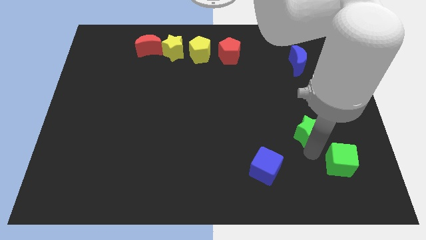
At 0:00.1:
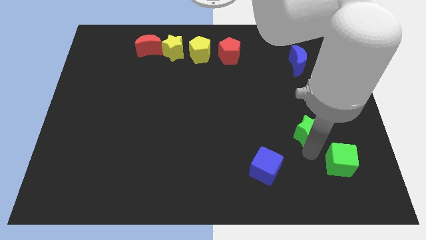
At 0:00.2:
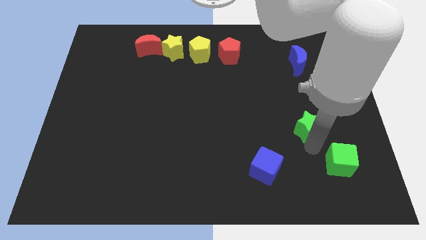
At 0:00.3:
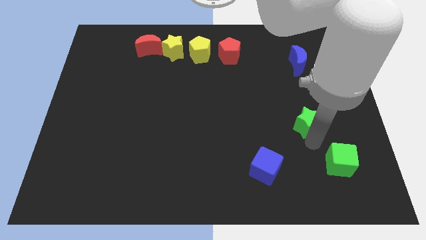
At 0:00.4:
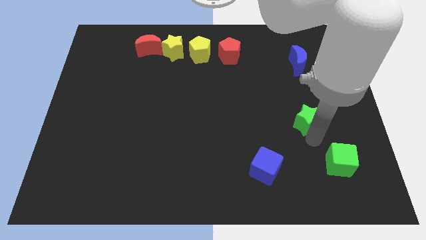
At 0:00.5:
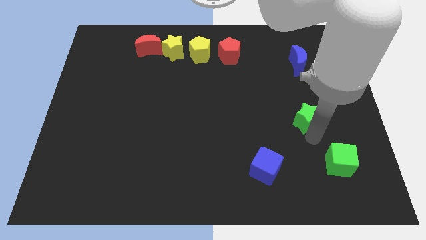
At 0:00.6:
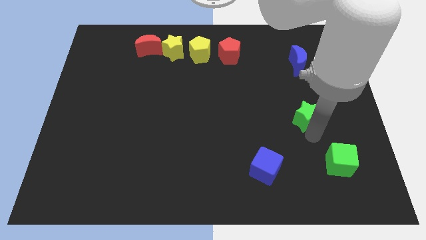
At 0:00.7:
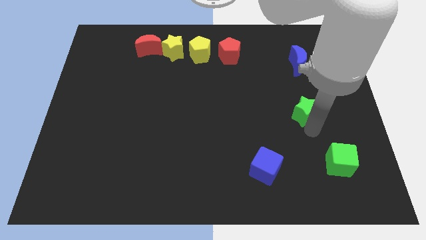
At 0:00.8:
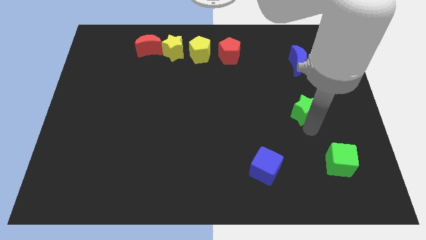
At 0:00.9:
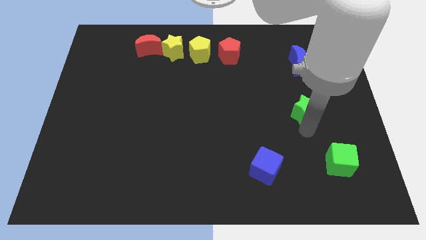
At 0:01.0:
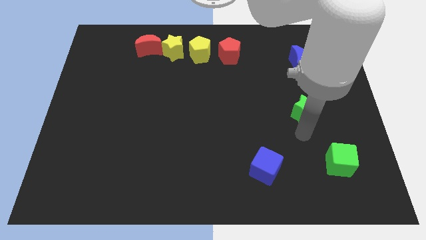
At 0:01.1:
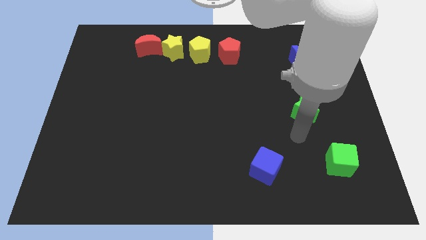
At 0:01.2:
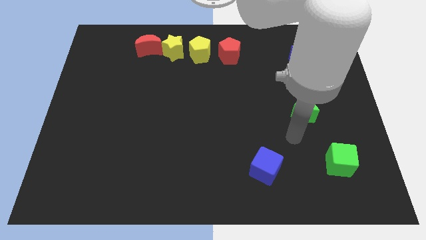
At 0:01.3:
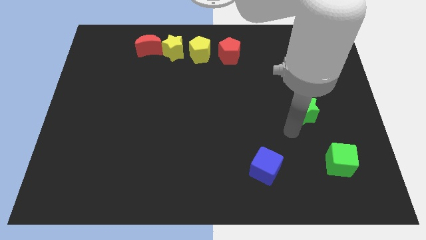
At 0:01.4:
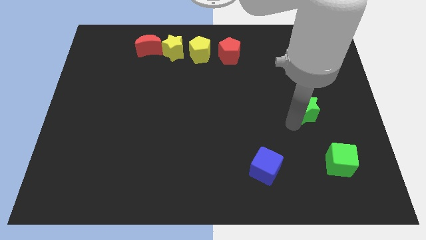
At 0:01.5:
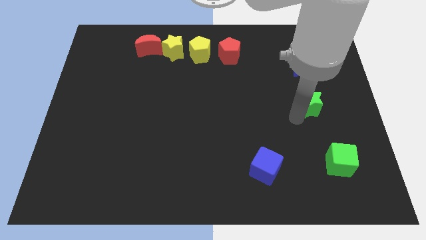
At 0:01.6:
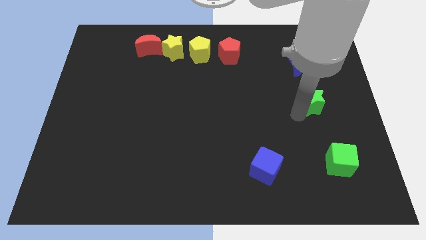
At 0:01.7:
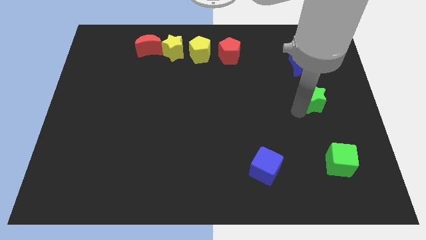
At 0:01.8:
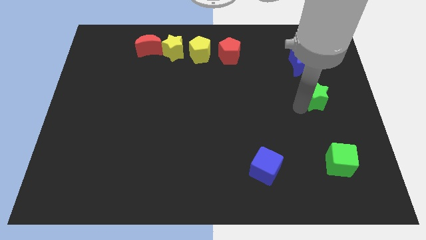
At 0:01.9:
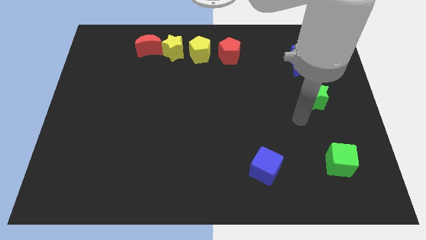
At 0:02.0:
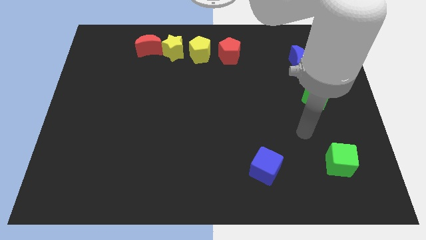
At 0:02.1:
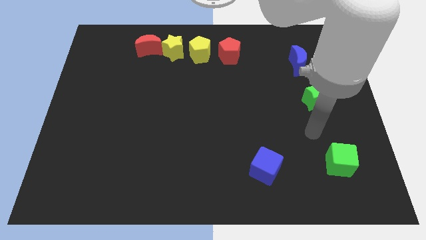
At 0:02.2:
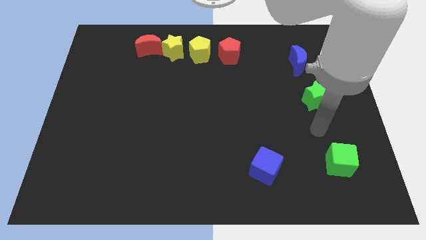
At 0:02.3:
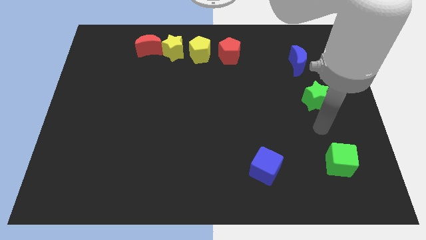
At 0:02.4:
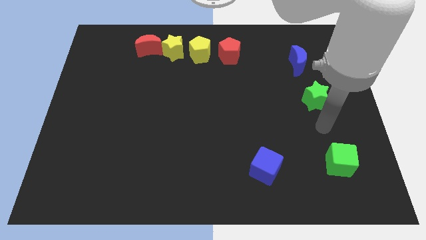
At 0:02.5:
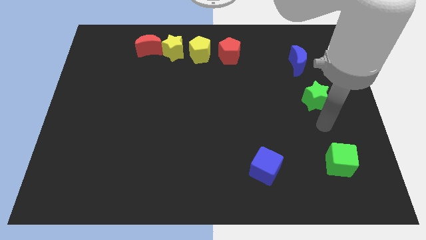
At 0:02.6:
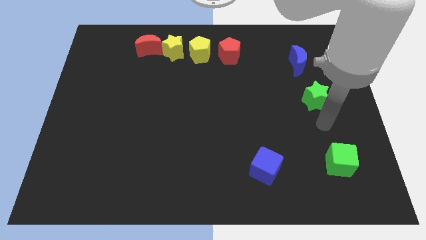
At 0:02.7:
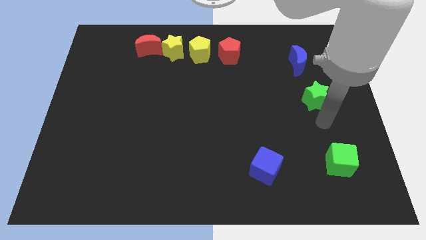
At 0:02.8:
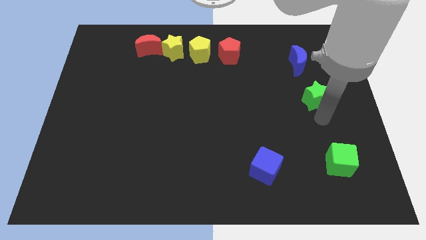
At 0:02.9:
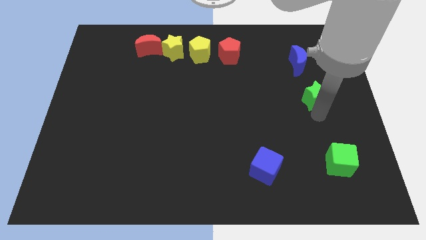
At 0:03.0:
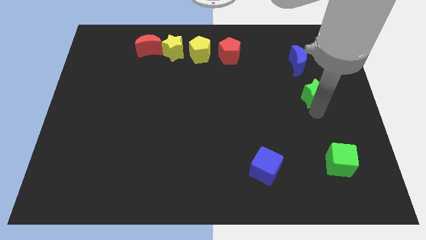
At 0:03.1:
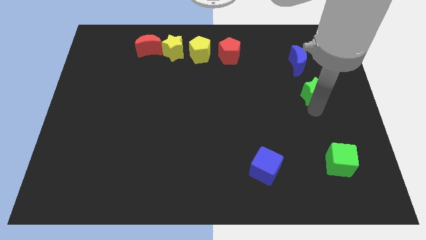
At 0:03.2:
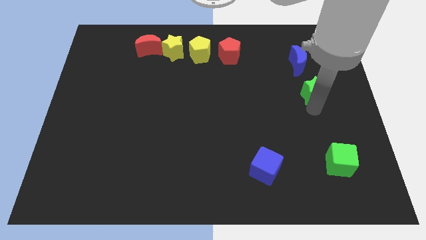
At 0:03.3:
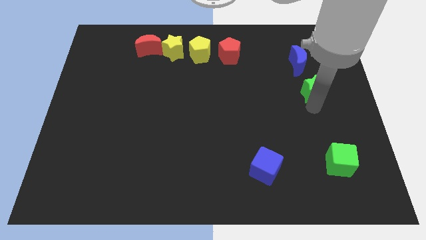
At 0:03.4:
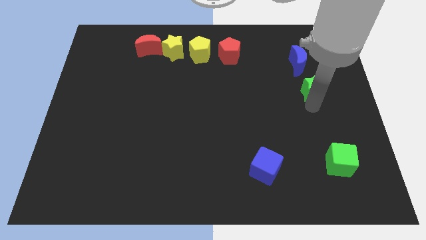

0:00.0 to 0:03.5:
place the green star below the blue moon

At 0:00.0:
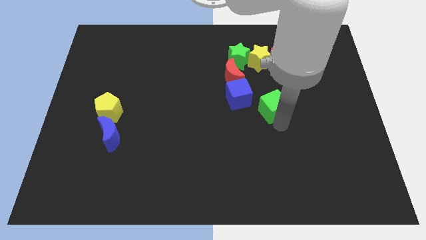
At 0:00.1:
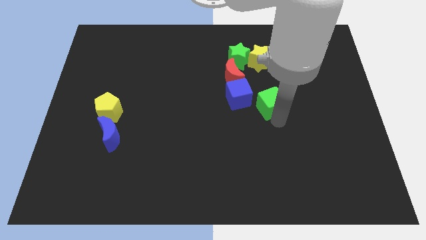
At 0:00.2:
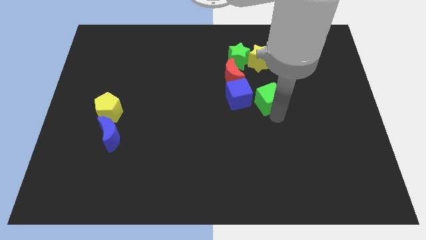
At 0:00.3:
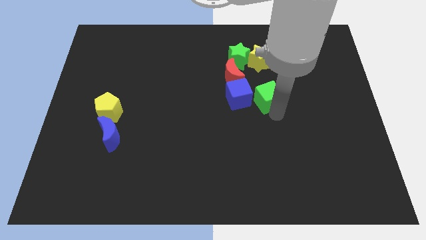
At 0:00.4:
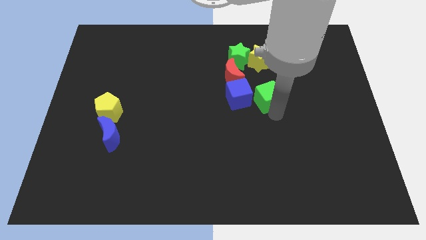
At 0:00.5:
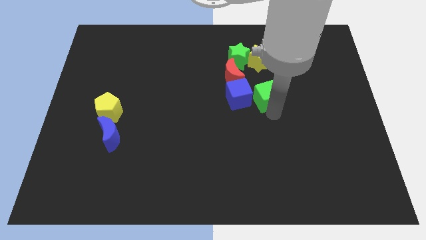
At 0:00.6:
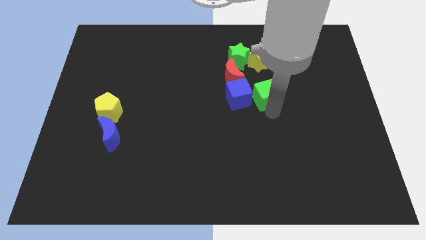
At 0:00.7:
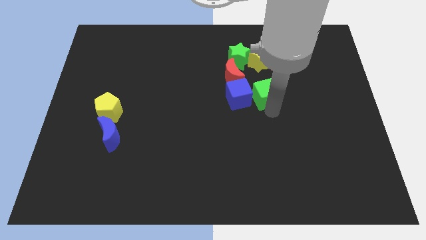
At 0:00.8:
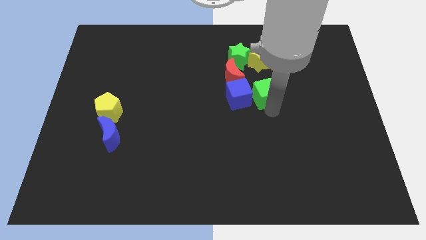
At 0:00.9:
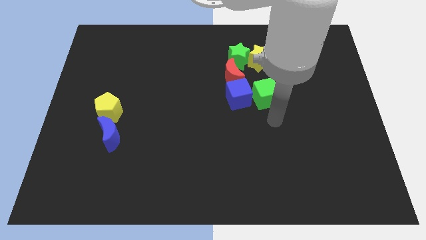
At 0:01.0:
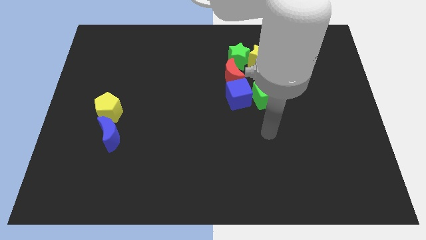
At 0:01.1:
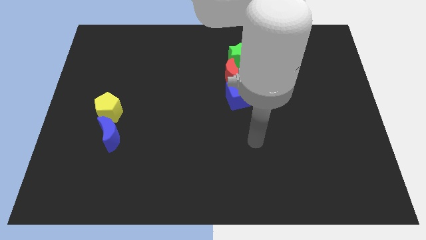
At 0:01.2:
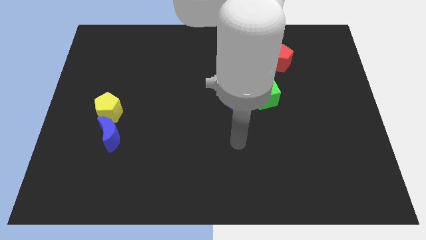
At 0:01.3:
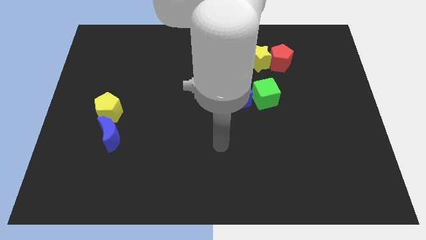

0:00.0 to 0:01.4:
push green cube to the right of blue cube

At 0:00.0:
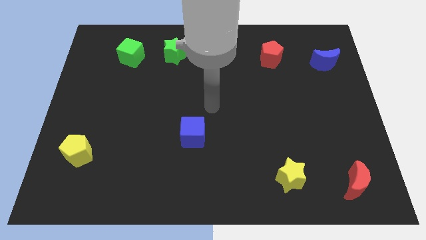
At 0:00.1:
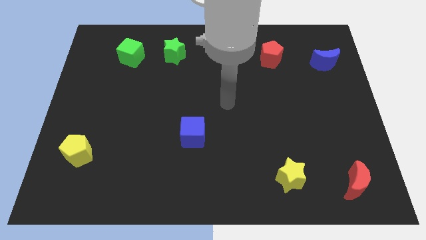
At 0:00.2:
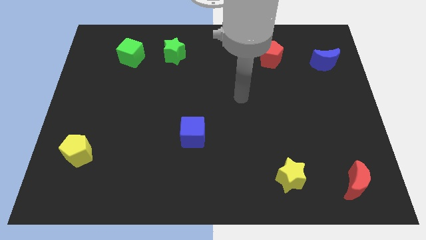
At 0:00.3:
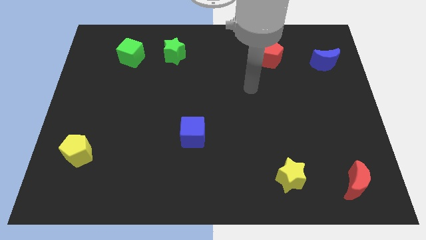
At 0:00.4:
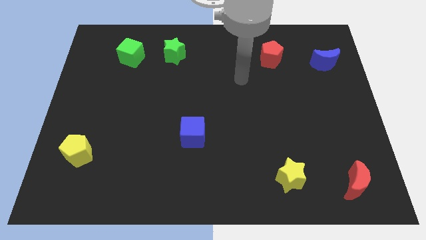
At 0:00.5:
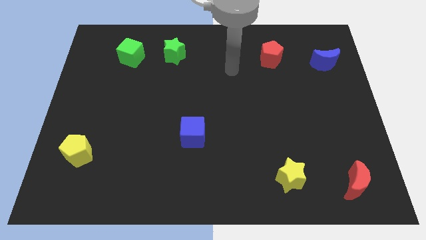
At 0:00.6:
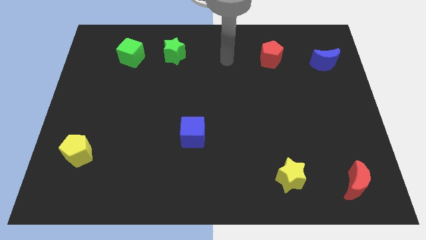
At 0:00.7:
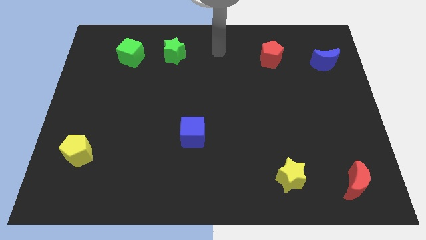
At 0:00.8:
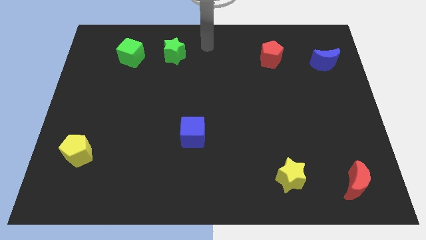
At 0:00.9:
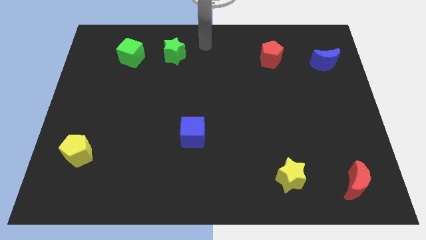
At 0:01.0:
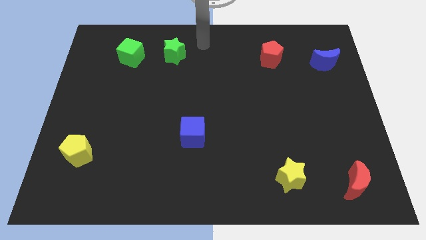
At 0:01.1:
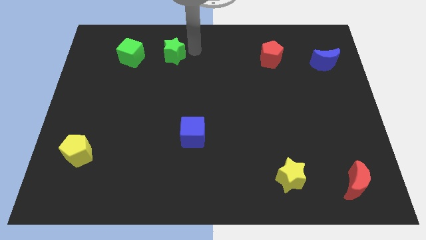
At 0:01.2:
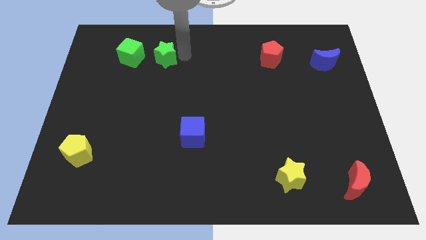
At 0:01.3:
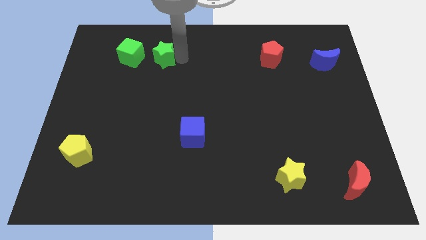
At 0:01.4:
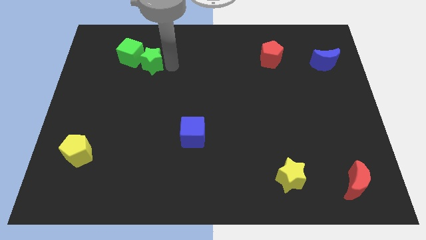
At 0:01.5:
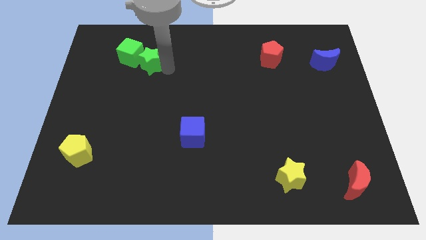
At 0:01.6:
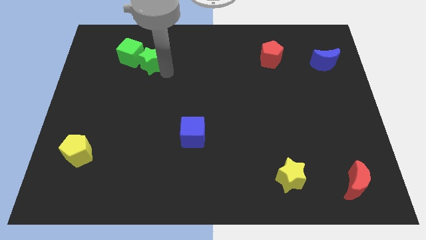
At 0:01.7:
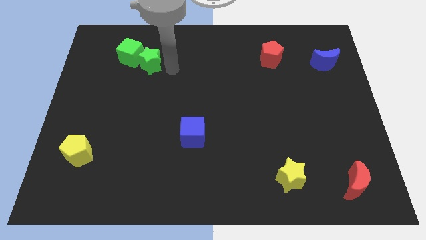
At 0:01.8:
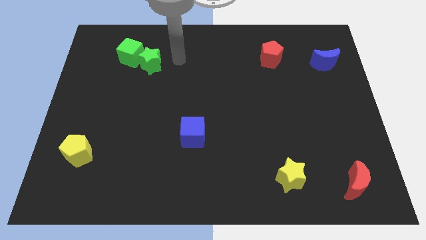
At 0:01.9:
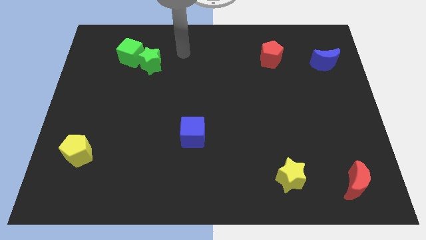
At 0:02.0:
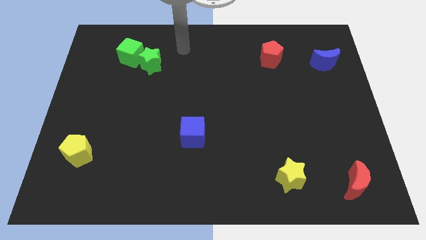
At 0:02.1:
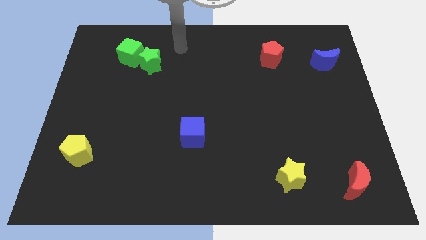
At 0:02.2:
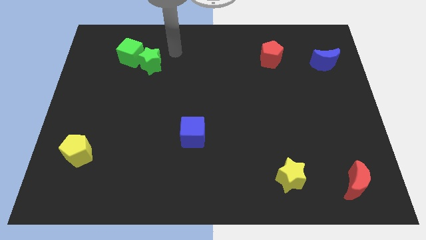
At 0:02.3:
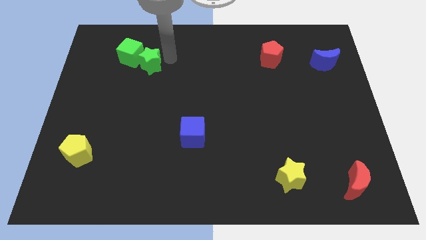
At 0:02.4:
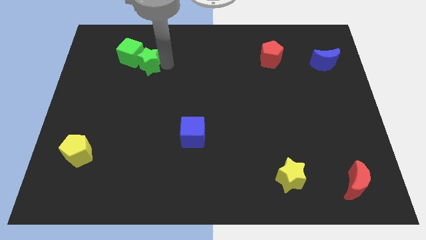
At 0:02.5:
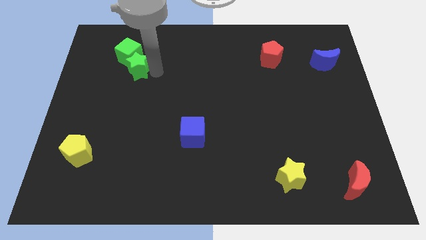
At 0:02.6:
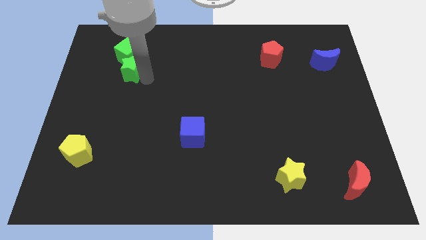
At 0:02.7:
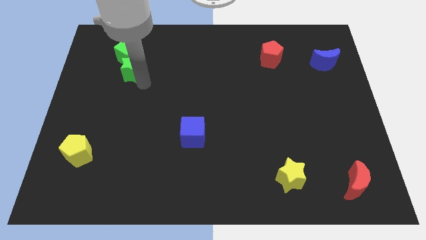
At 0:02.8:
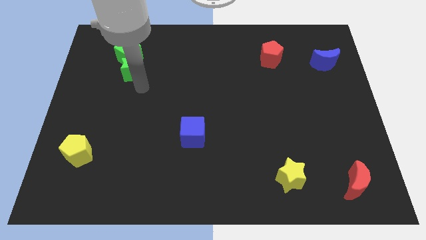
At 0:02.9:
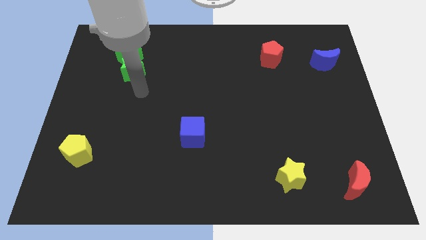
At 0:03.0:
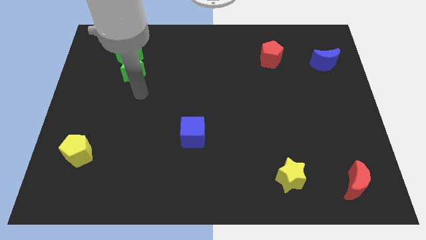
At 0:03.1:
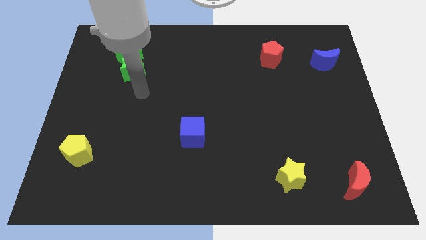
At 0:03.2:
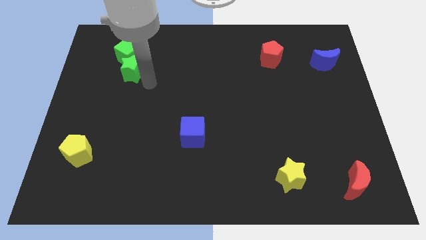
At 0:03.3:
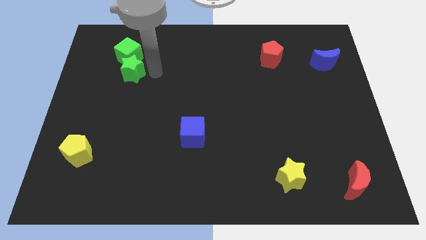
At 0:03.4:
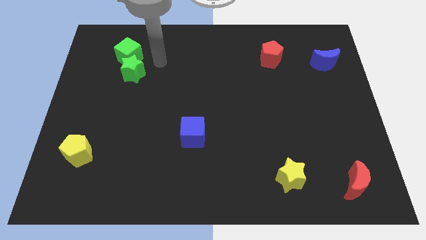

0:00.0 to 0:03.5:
push the green star in to green cube

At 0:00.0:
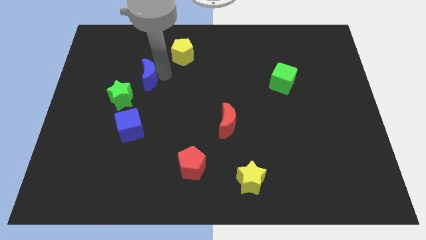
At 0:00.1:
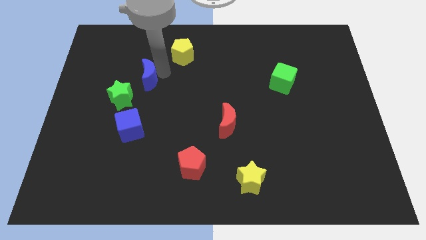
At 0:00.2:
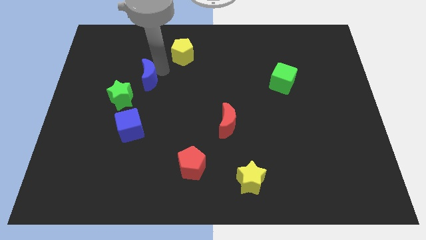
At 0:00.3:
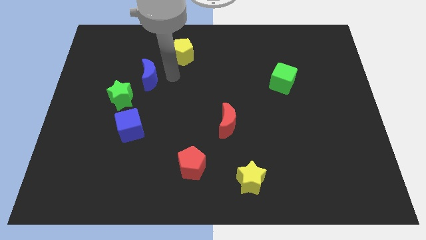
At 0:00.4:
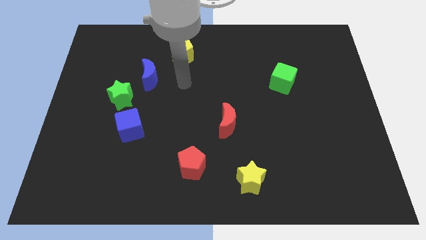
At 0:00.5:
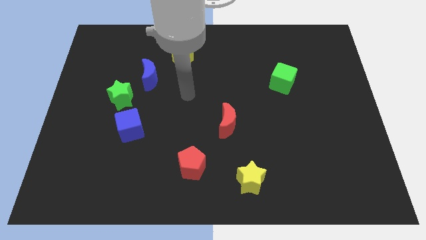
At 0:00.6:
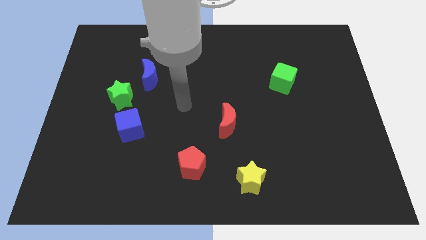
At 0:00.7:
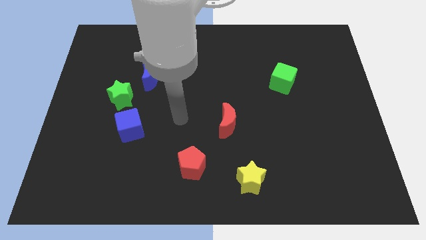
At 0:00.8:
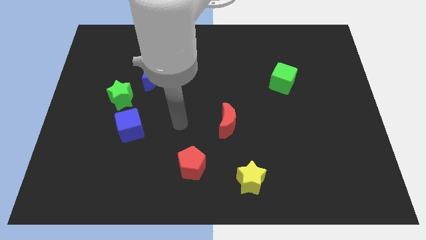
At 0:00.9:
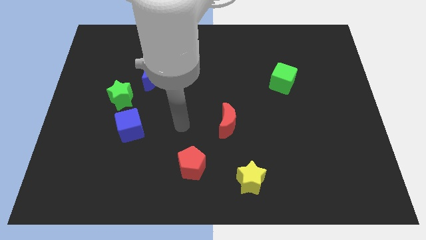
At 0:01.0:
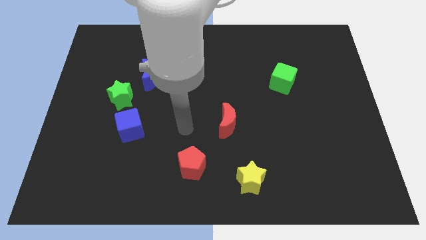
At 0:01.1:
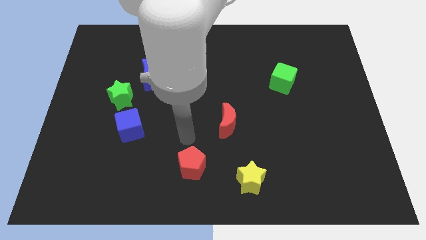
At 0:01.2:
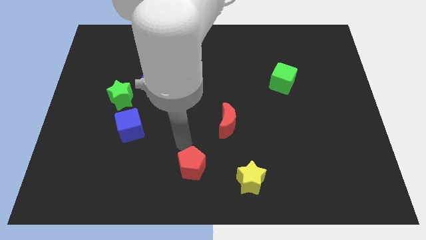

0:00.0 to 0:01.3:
move the arm to the top left side of the red pentagon
